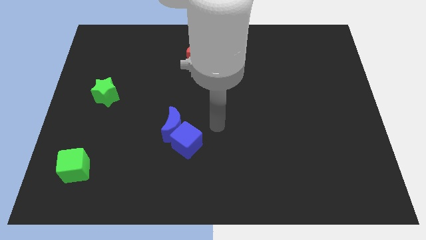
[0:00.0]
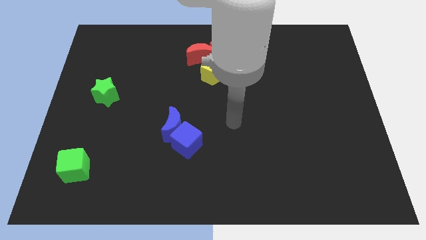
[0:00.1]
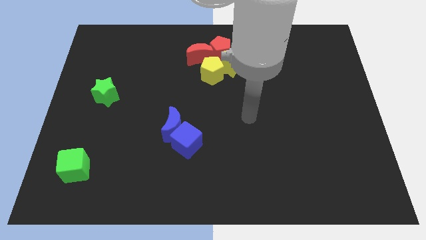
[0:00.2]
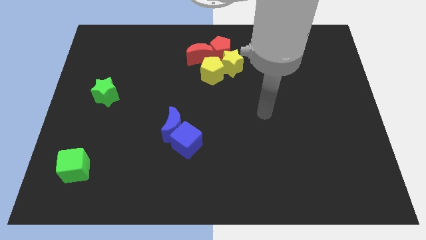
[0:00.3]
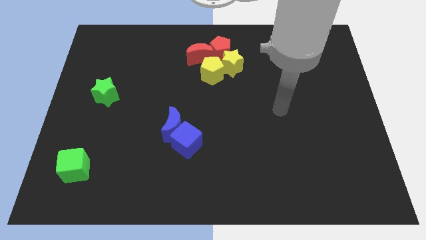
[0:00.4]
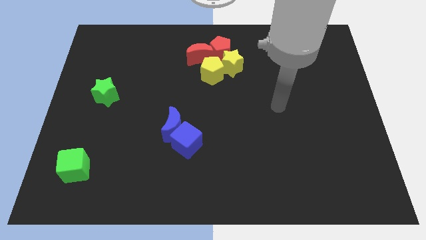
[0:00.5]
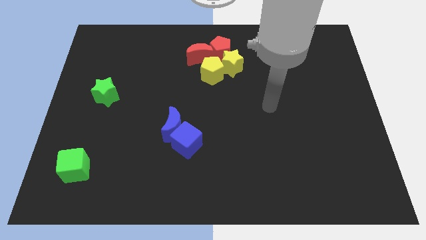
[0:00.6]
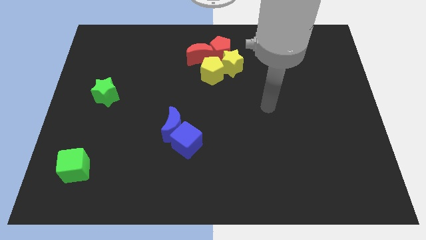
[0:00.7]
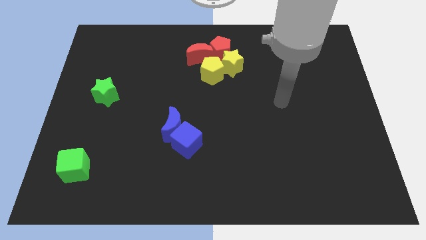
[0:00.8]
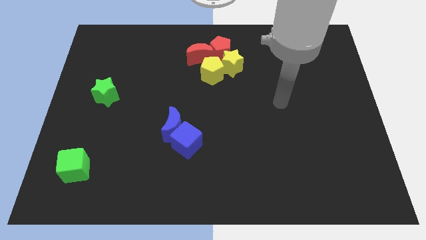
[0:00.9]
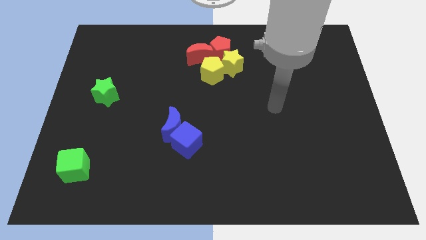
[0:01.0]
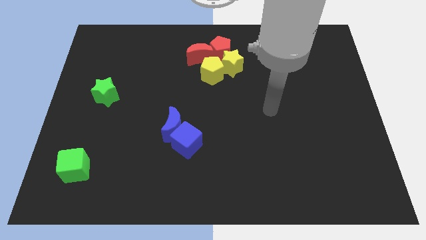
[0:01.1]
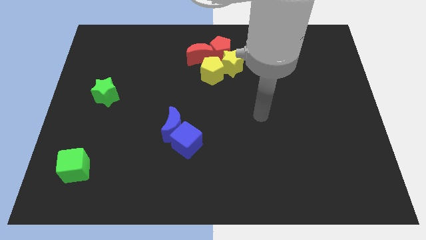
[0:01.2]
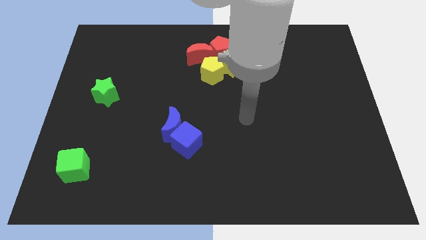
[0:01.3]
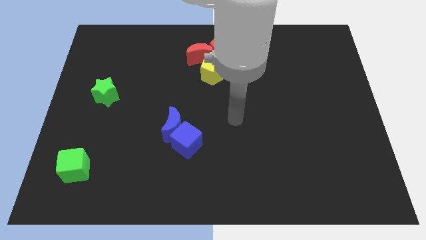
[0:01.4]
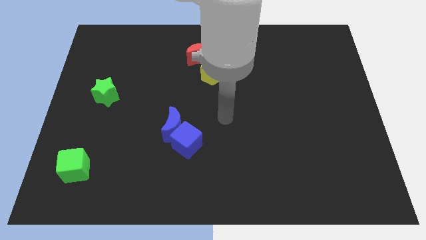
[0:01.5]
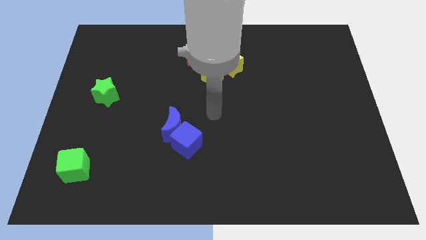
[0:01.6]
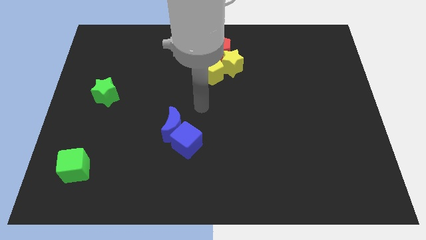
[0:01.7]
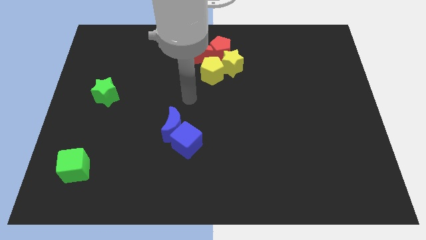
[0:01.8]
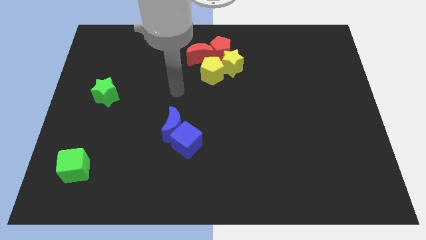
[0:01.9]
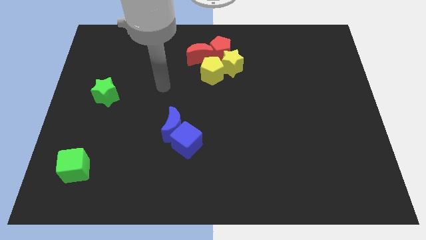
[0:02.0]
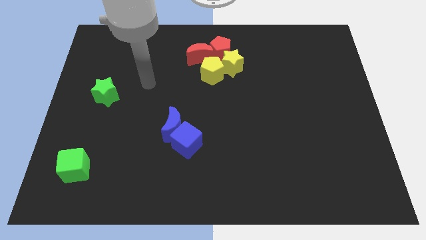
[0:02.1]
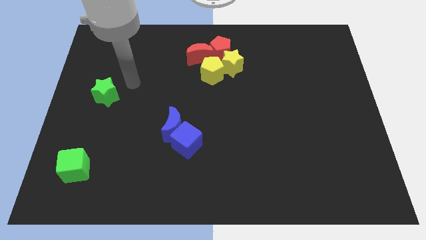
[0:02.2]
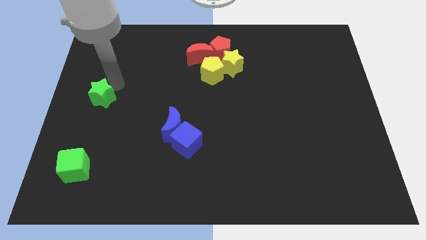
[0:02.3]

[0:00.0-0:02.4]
move arm towards the top of the green star

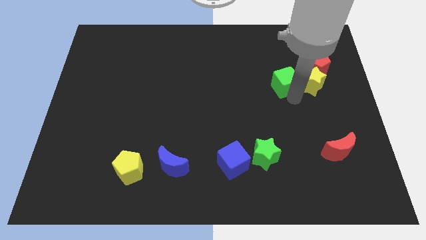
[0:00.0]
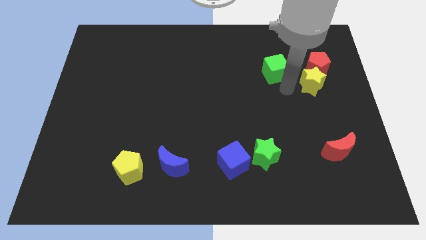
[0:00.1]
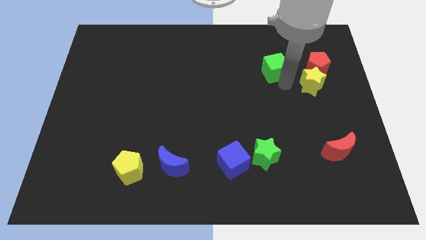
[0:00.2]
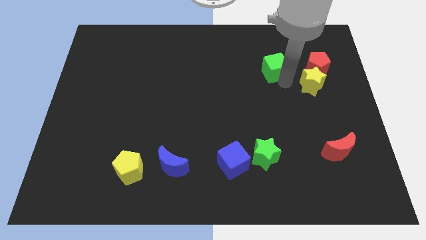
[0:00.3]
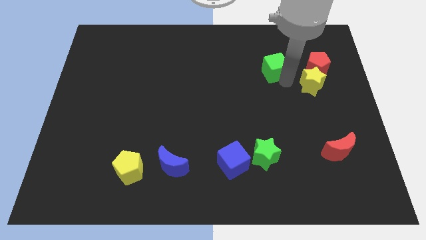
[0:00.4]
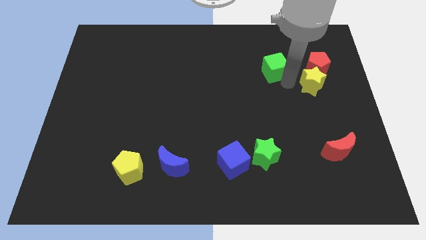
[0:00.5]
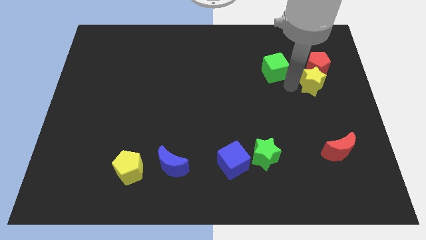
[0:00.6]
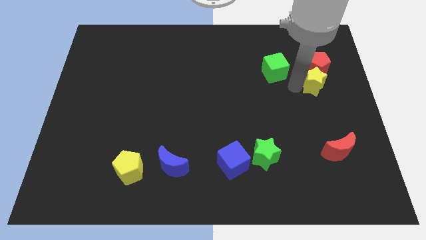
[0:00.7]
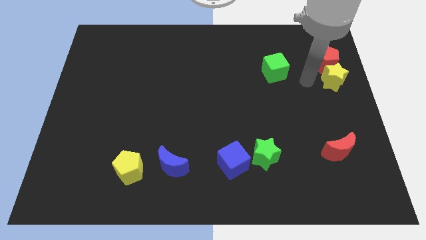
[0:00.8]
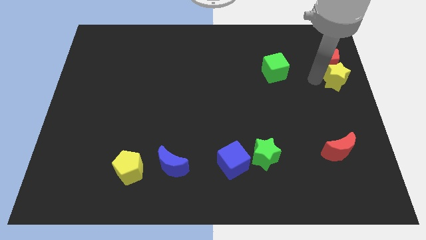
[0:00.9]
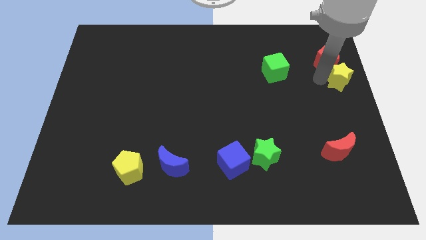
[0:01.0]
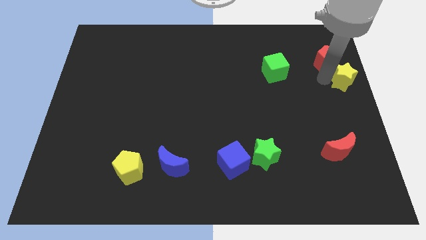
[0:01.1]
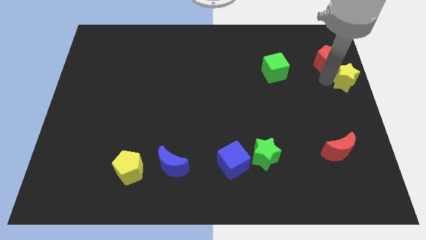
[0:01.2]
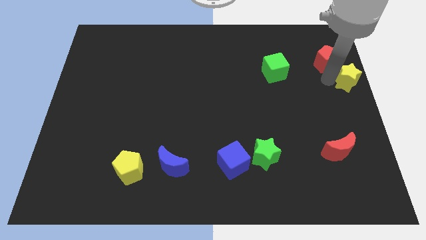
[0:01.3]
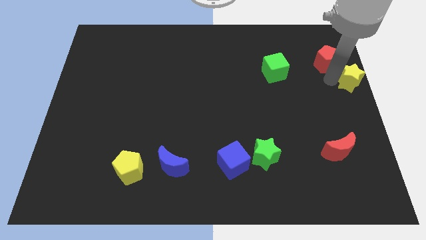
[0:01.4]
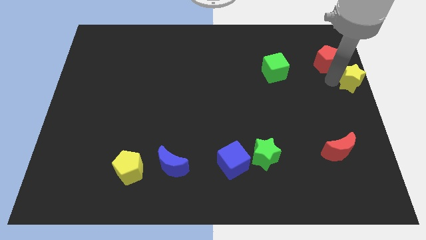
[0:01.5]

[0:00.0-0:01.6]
move the yellow star slightly to right

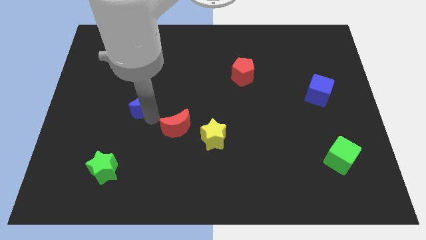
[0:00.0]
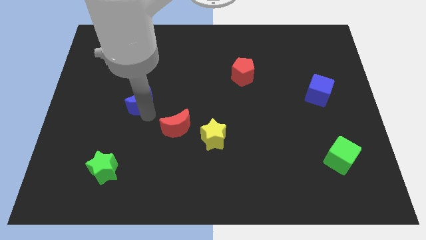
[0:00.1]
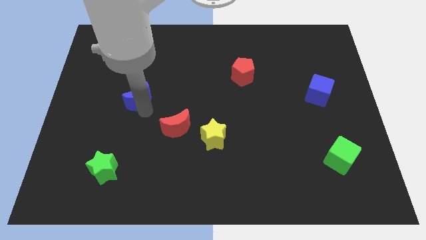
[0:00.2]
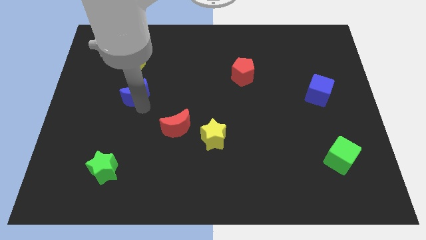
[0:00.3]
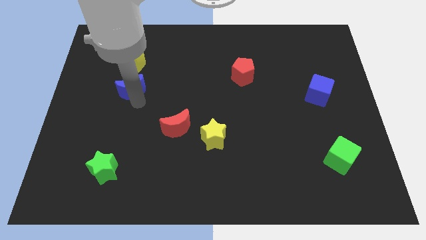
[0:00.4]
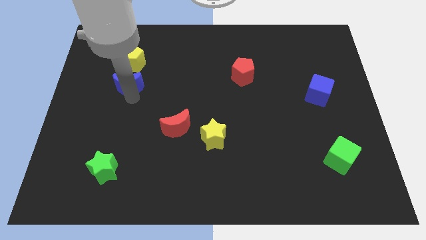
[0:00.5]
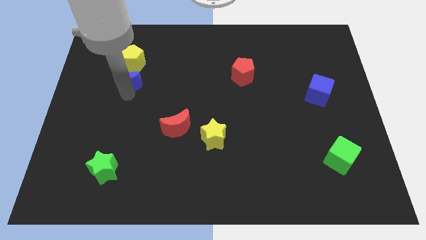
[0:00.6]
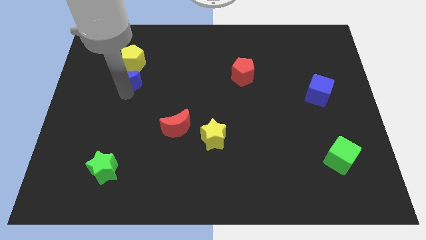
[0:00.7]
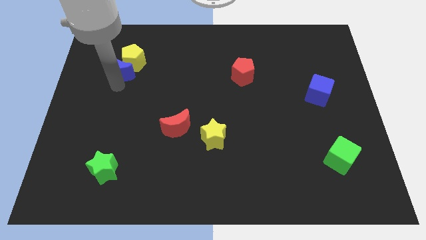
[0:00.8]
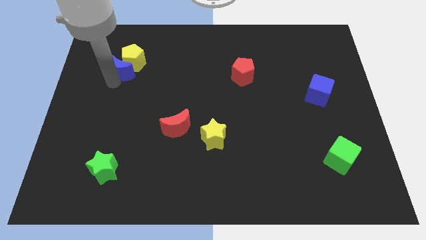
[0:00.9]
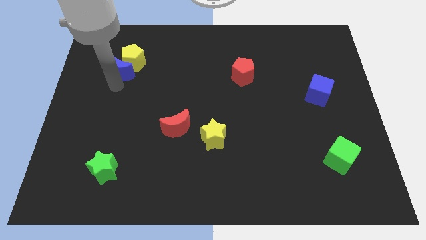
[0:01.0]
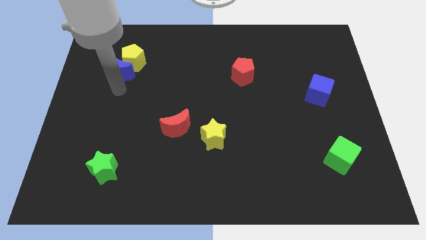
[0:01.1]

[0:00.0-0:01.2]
move the blue crescent into the yellow pentagon

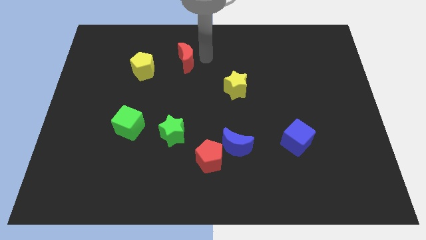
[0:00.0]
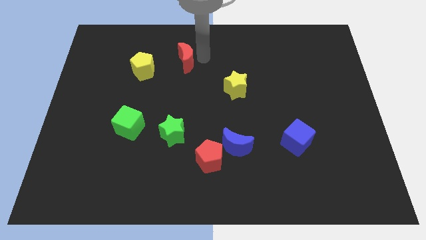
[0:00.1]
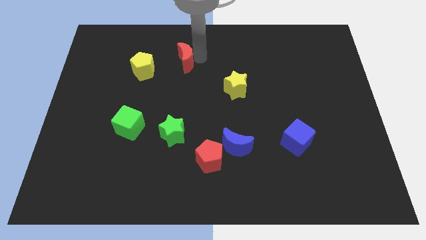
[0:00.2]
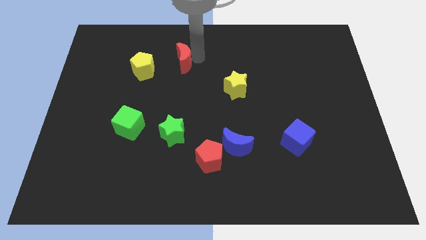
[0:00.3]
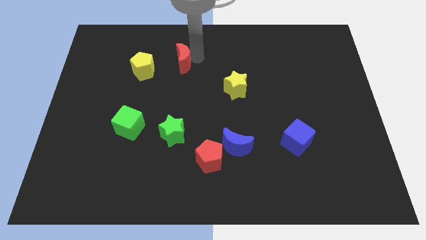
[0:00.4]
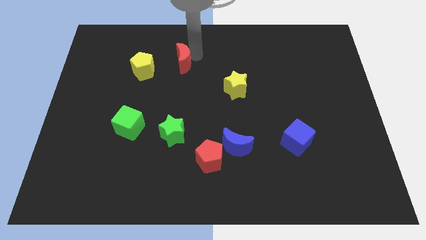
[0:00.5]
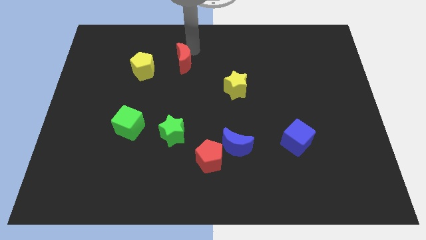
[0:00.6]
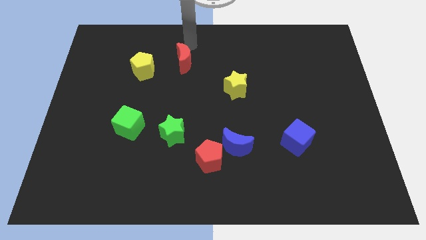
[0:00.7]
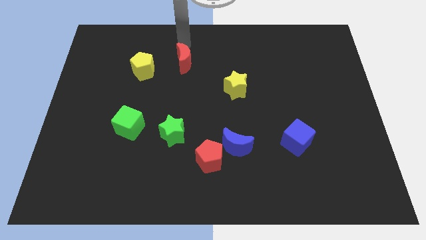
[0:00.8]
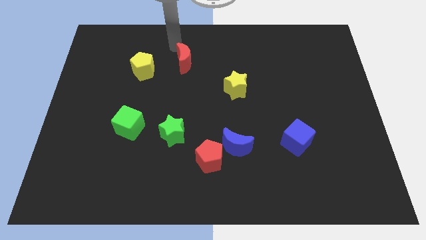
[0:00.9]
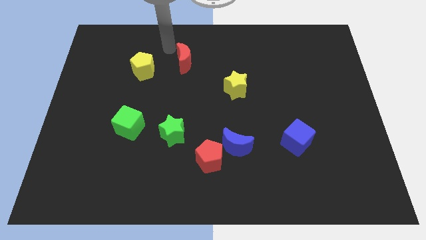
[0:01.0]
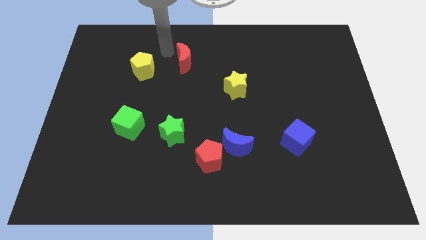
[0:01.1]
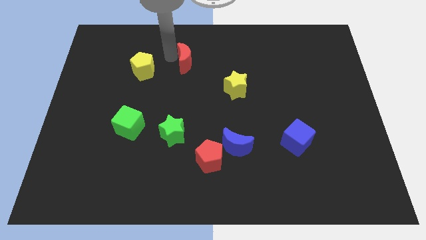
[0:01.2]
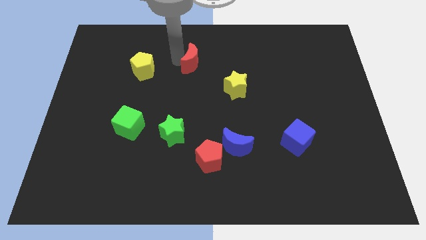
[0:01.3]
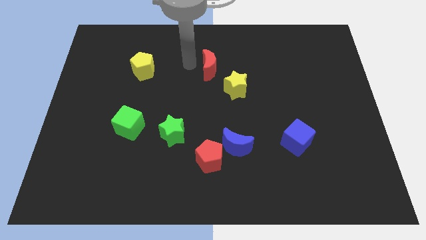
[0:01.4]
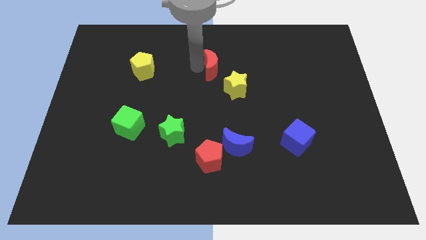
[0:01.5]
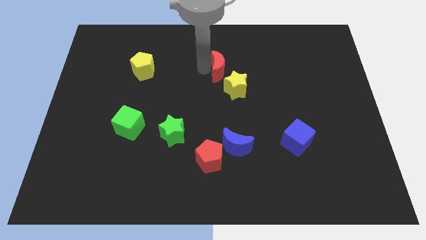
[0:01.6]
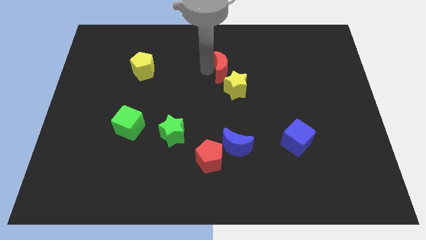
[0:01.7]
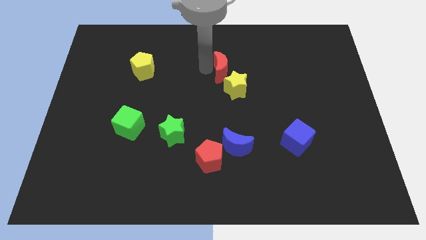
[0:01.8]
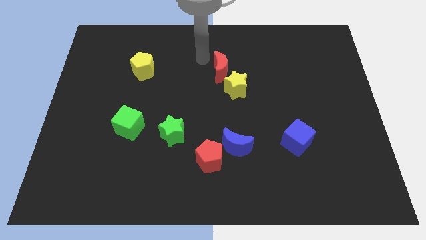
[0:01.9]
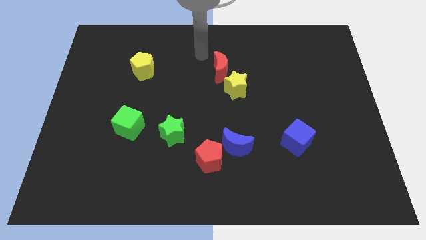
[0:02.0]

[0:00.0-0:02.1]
push the red crescent diagonally to the top right of the yellow star

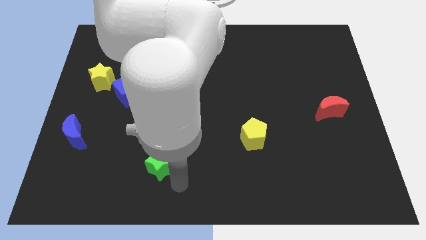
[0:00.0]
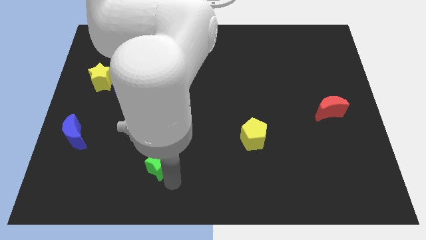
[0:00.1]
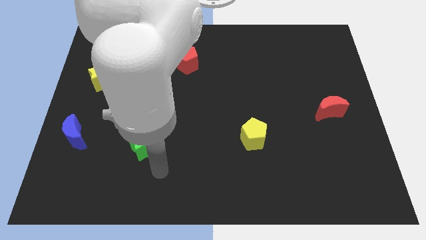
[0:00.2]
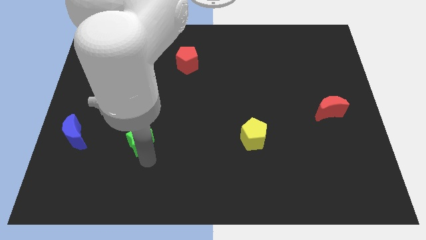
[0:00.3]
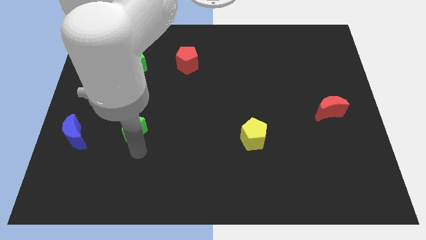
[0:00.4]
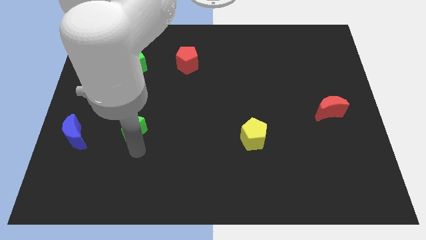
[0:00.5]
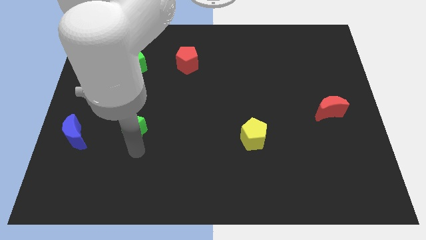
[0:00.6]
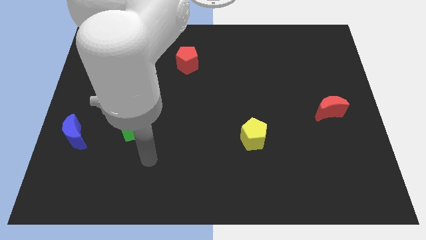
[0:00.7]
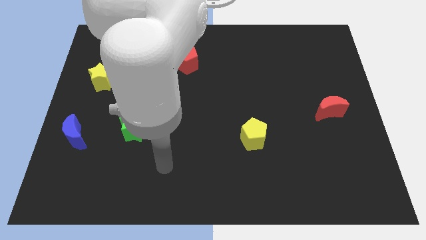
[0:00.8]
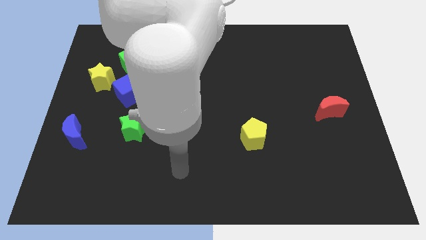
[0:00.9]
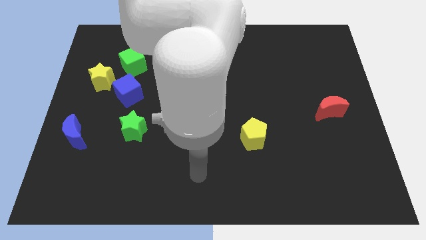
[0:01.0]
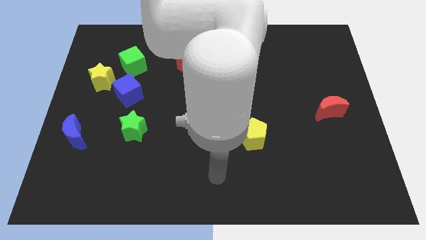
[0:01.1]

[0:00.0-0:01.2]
push the green star to the bottom of the blue cube

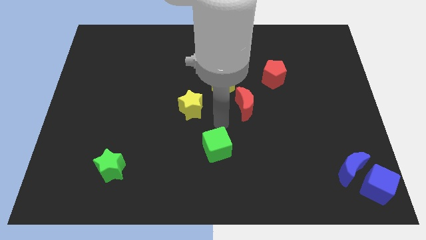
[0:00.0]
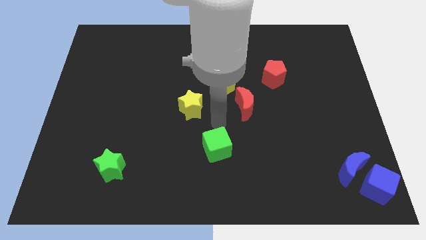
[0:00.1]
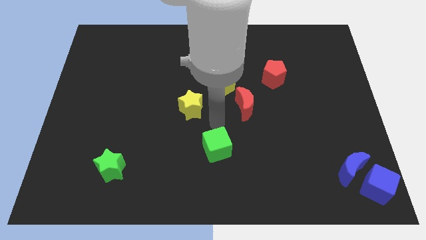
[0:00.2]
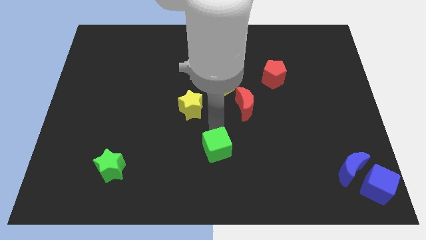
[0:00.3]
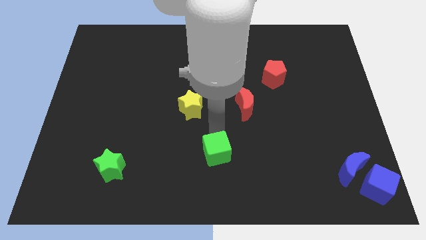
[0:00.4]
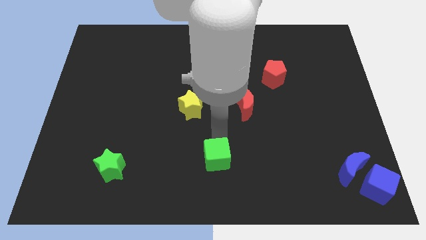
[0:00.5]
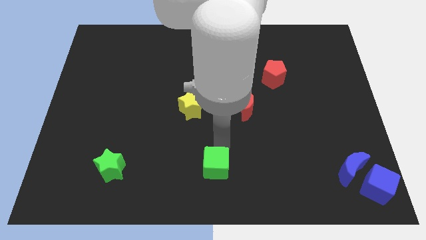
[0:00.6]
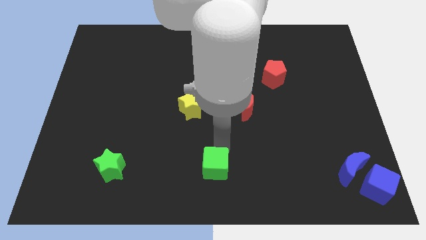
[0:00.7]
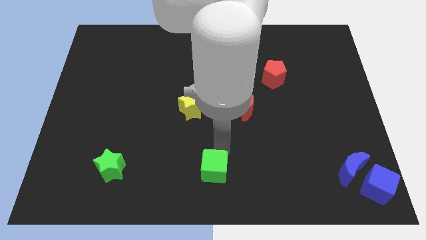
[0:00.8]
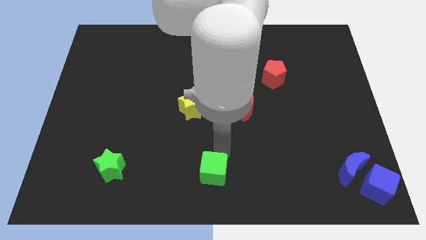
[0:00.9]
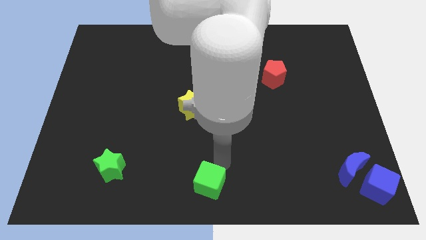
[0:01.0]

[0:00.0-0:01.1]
place the green cube parallel to green star
